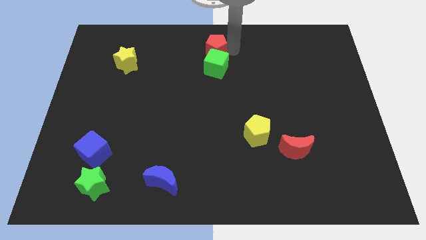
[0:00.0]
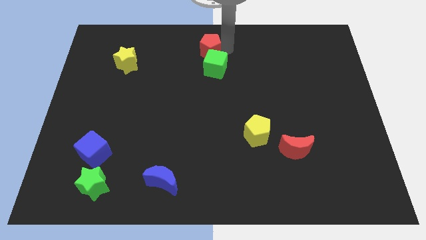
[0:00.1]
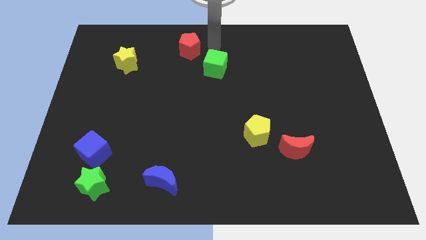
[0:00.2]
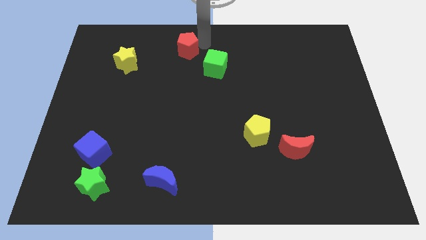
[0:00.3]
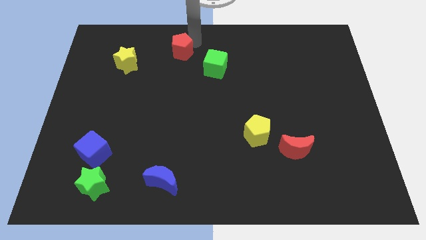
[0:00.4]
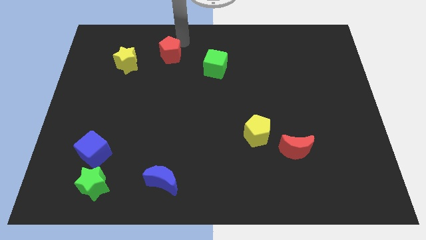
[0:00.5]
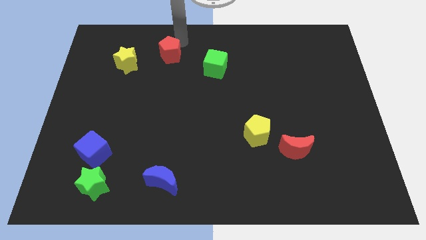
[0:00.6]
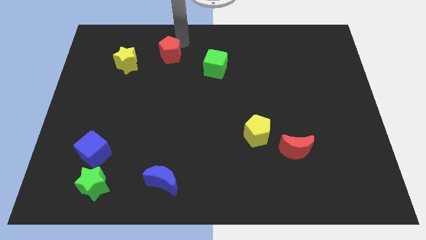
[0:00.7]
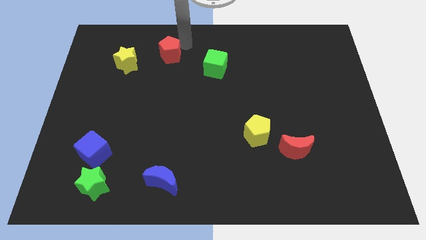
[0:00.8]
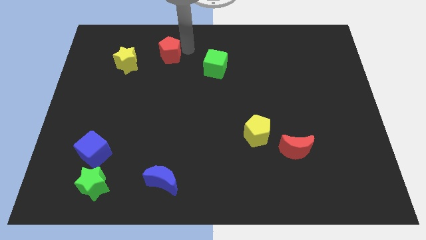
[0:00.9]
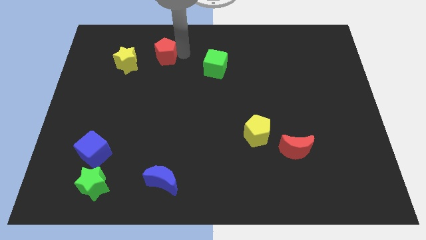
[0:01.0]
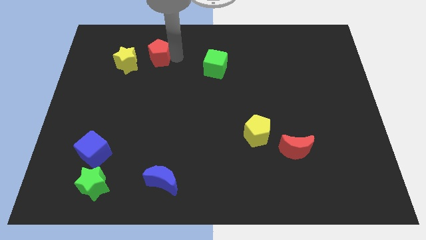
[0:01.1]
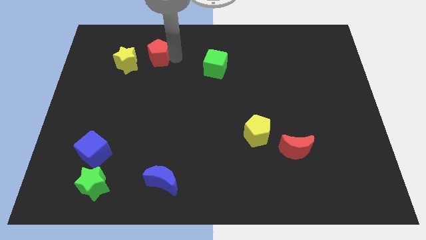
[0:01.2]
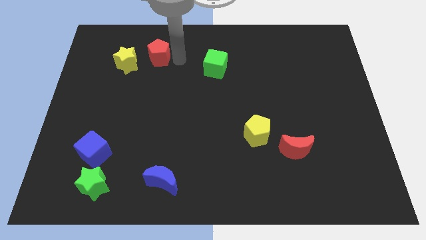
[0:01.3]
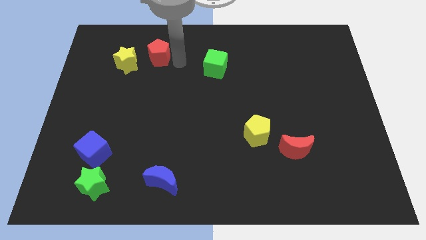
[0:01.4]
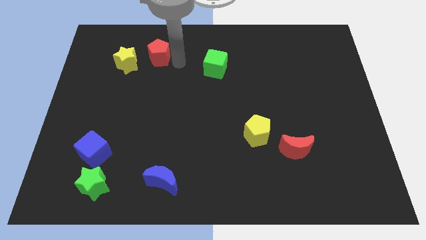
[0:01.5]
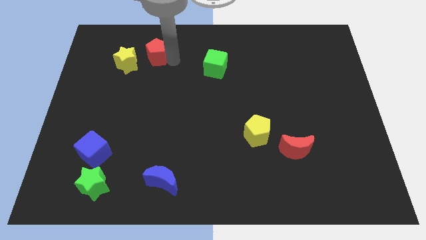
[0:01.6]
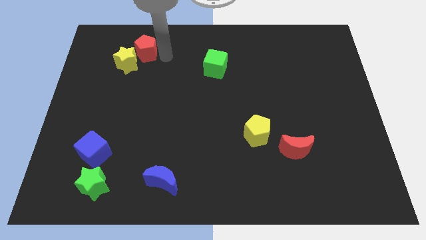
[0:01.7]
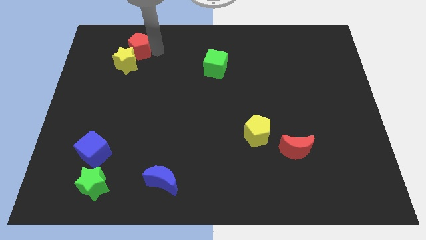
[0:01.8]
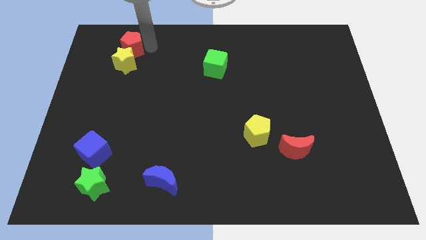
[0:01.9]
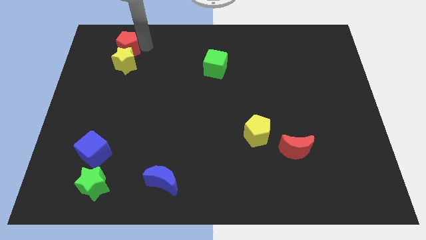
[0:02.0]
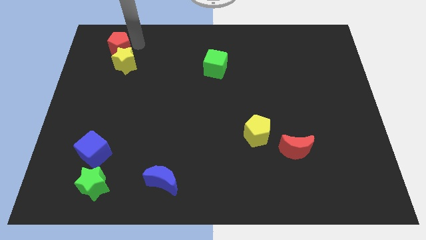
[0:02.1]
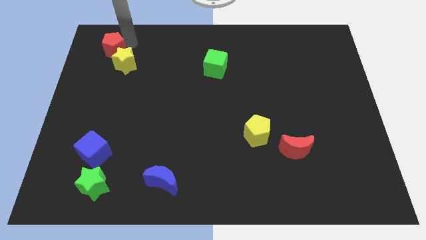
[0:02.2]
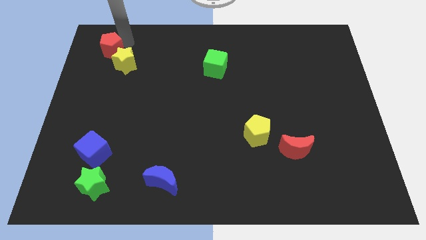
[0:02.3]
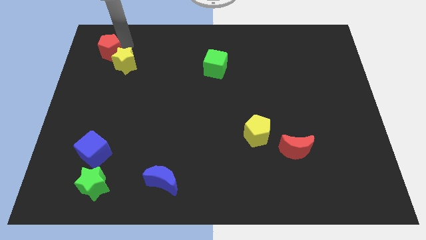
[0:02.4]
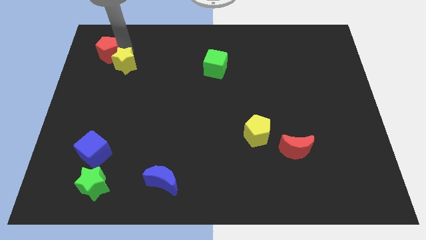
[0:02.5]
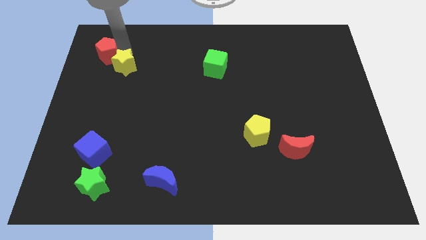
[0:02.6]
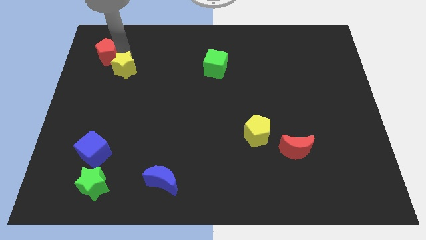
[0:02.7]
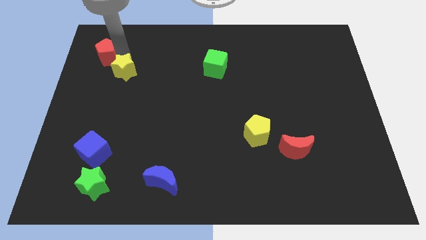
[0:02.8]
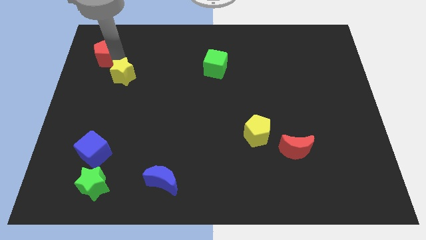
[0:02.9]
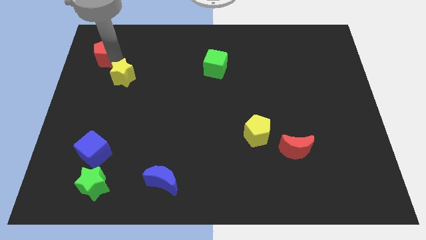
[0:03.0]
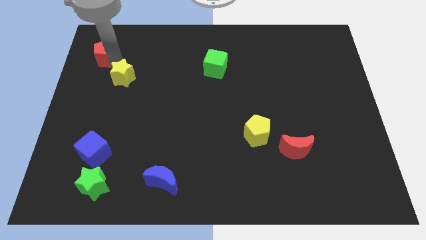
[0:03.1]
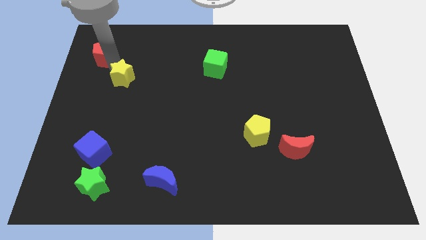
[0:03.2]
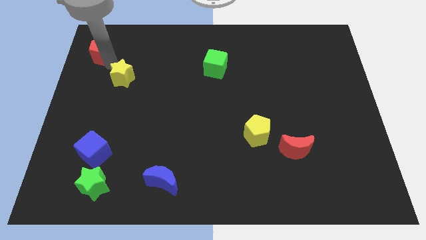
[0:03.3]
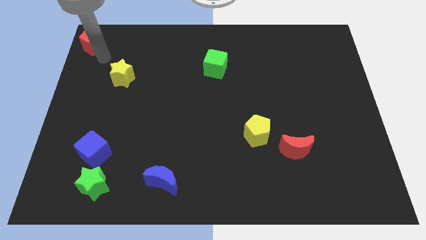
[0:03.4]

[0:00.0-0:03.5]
push the red pentagon to the top left side of the yellow star

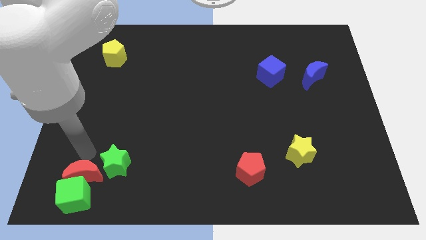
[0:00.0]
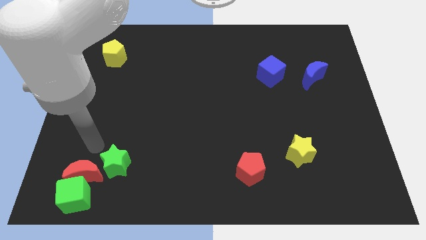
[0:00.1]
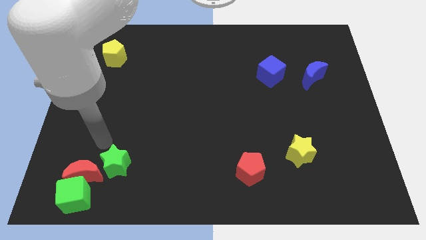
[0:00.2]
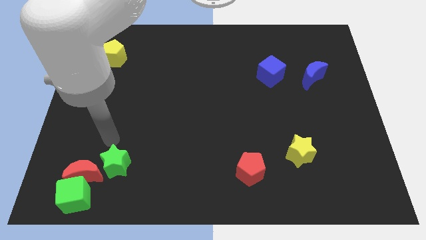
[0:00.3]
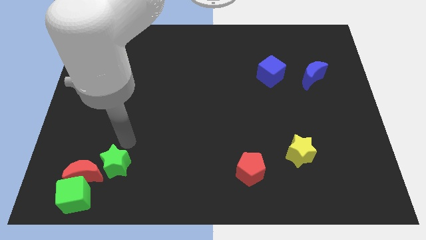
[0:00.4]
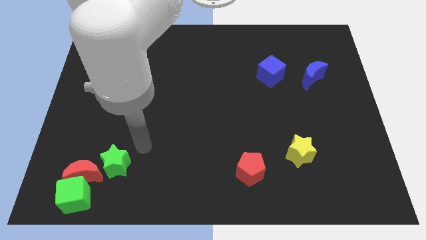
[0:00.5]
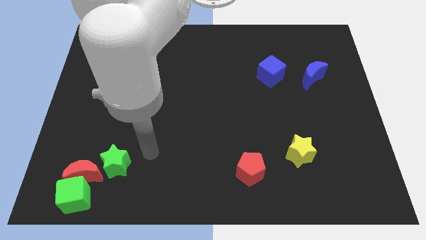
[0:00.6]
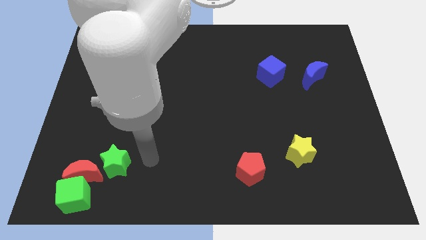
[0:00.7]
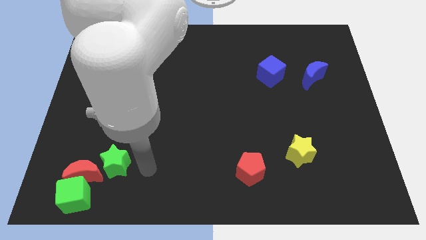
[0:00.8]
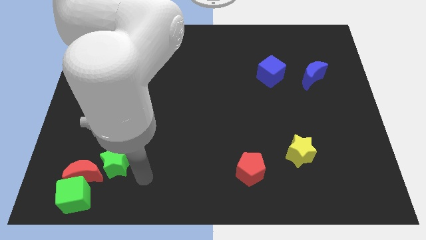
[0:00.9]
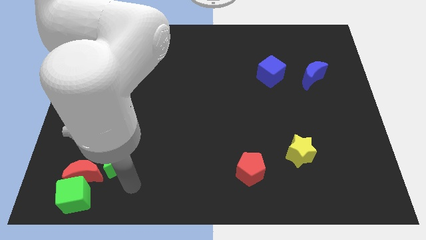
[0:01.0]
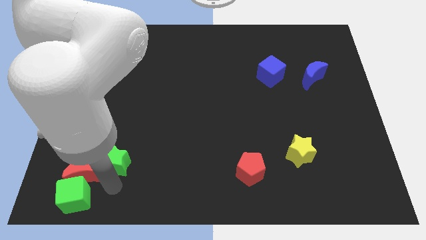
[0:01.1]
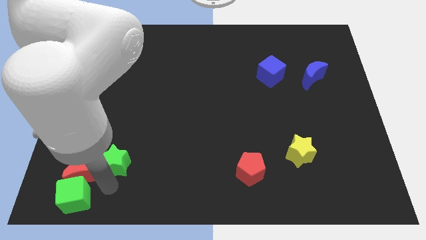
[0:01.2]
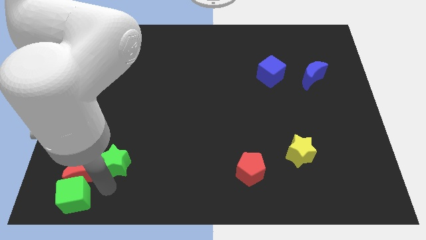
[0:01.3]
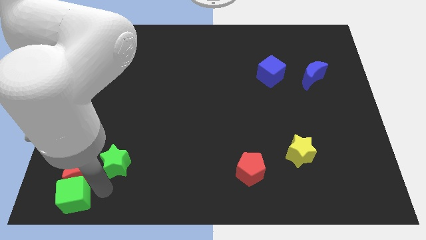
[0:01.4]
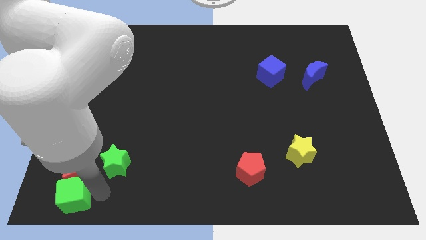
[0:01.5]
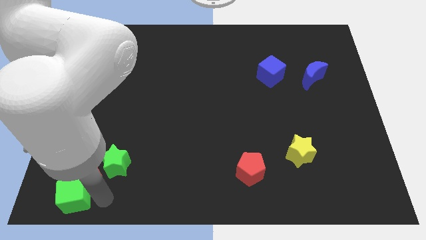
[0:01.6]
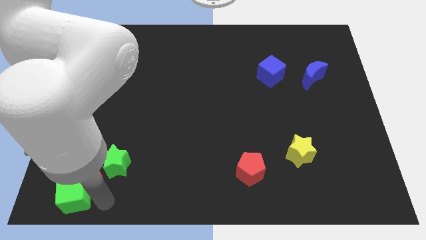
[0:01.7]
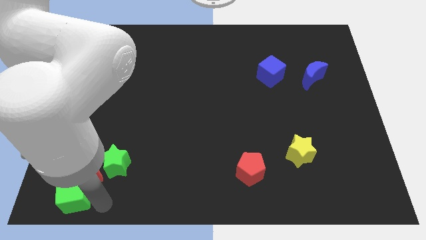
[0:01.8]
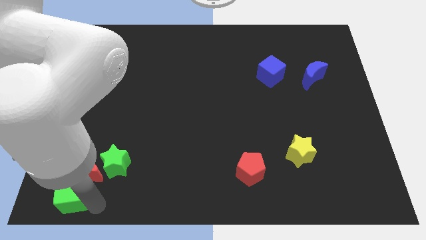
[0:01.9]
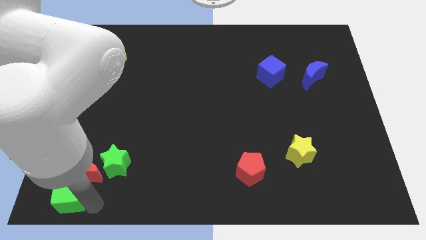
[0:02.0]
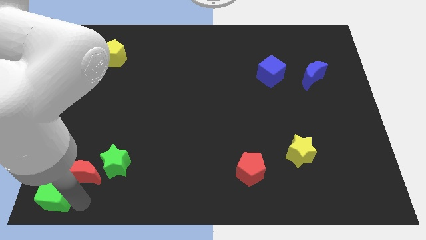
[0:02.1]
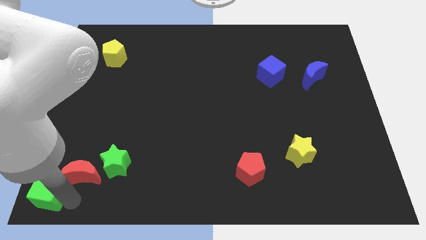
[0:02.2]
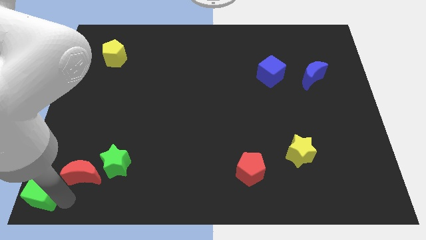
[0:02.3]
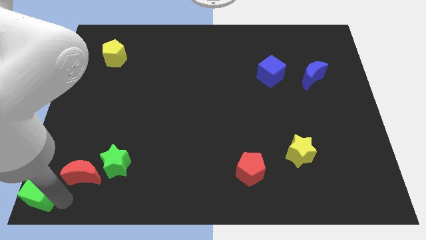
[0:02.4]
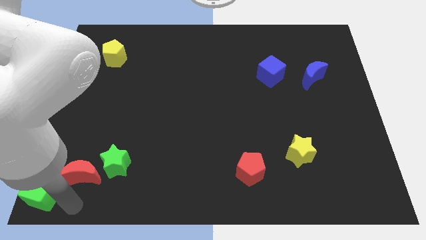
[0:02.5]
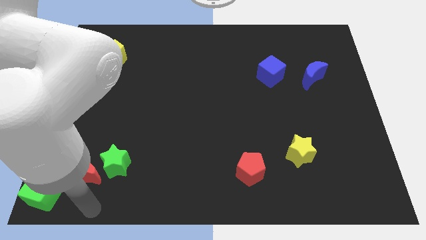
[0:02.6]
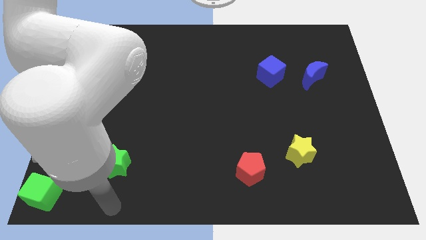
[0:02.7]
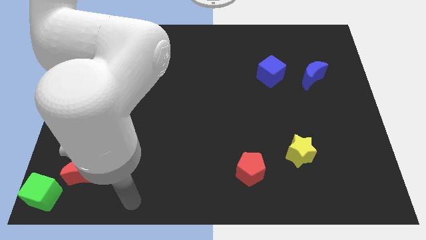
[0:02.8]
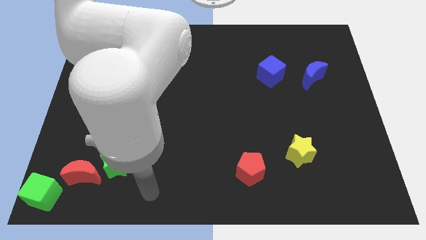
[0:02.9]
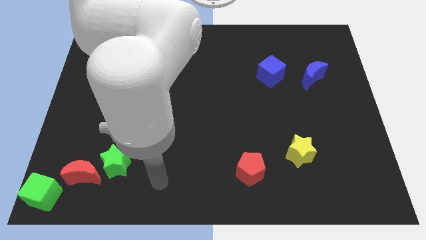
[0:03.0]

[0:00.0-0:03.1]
move the green cube to the bottom left of the board

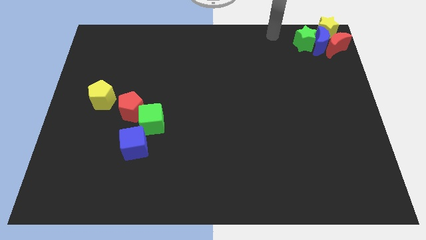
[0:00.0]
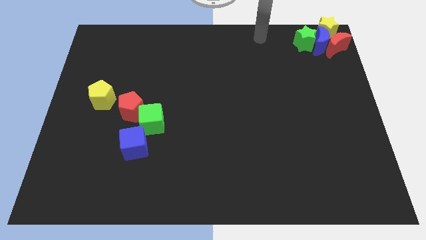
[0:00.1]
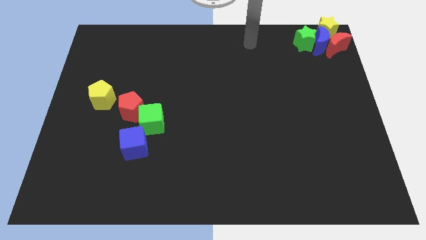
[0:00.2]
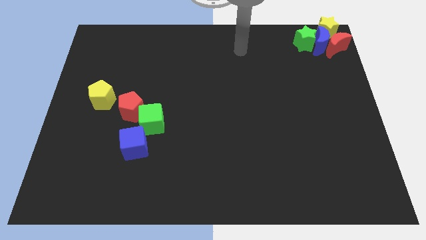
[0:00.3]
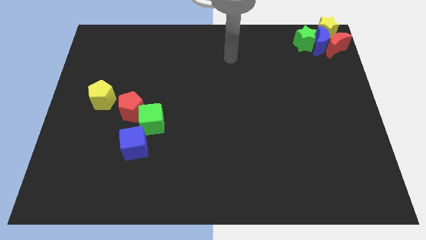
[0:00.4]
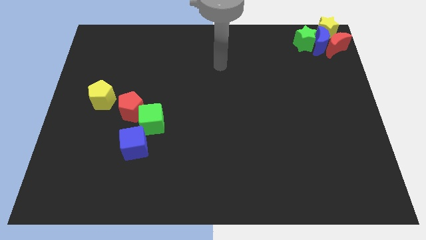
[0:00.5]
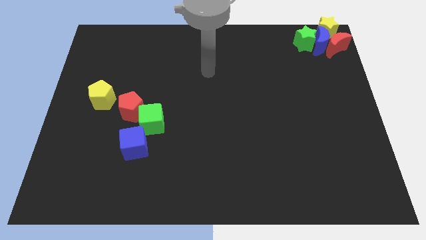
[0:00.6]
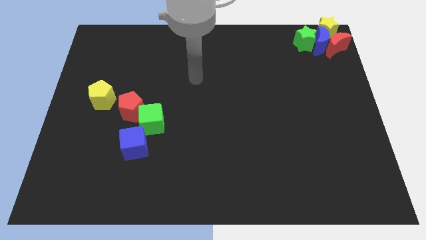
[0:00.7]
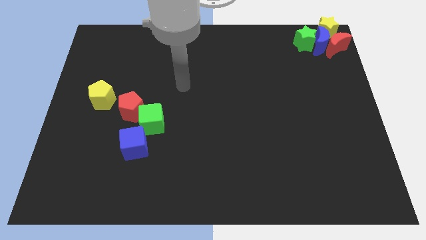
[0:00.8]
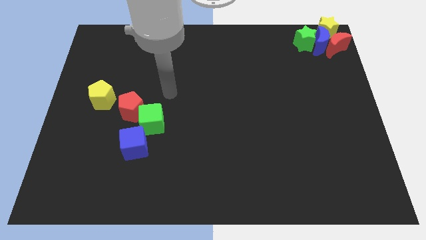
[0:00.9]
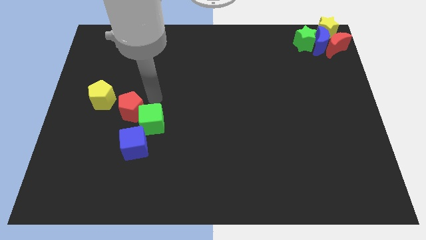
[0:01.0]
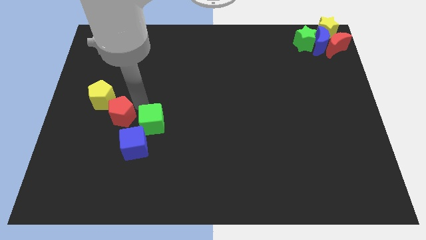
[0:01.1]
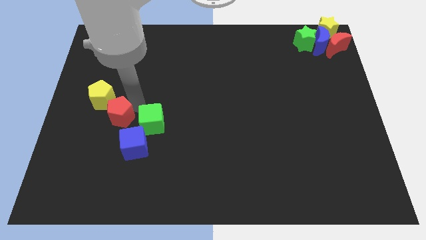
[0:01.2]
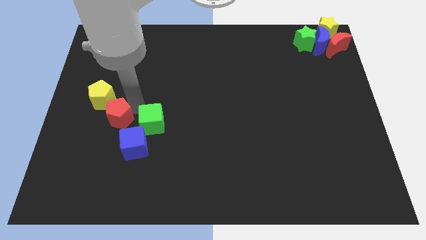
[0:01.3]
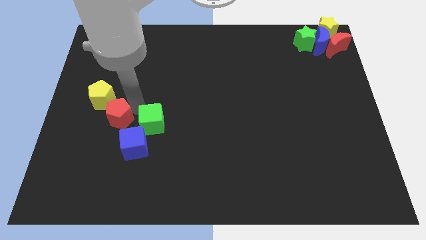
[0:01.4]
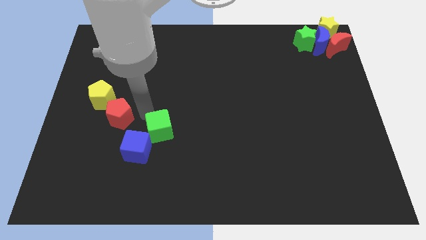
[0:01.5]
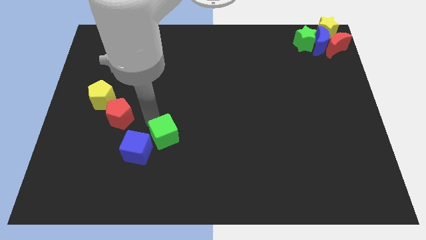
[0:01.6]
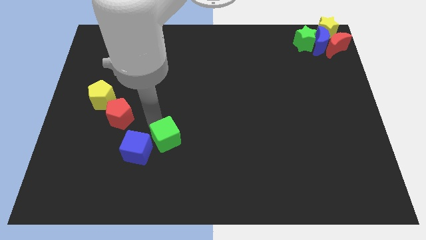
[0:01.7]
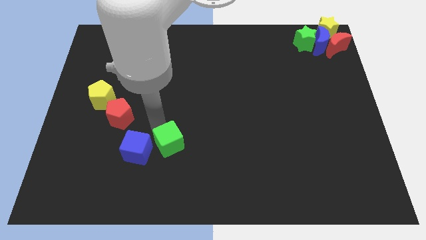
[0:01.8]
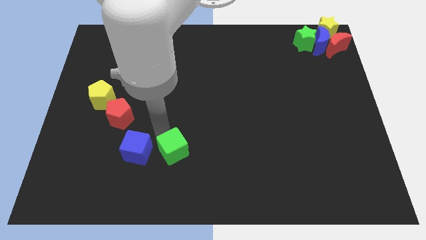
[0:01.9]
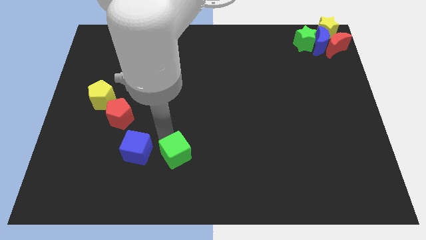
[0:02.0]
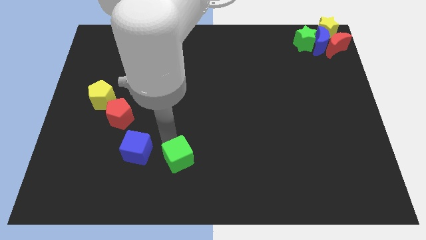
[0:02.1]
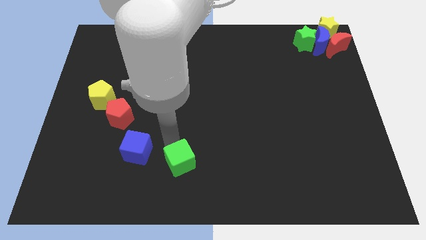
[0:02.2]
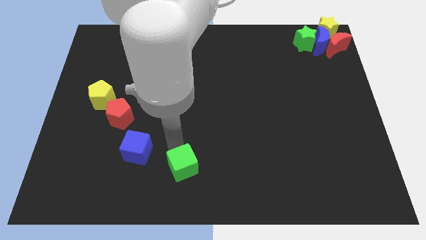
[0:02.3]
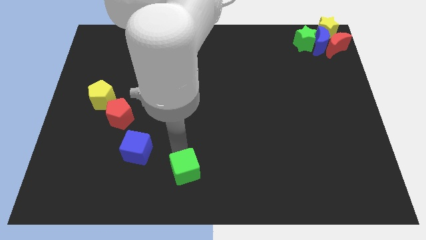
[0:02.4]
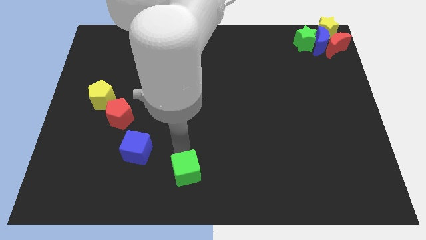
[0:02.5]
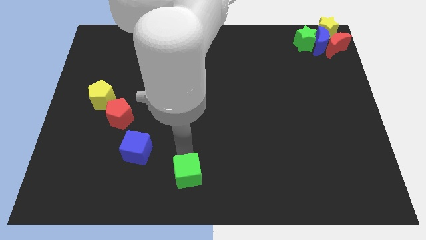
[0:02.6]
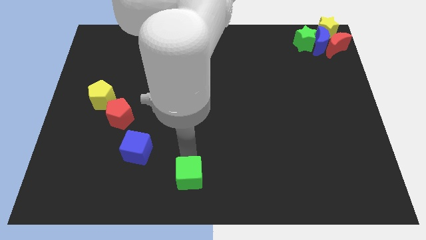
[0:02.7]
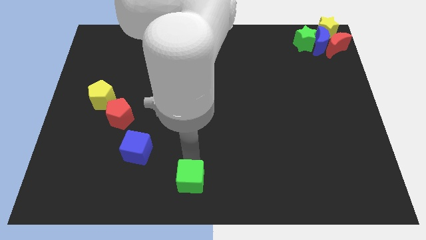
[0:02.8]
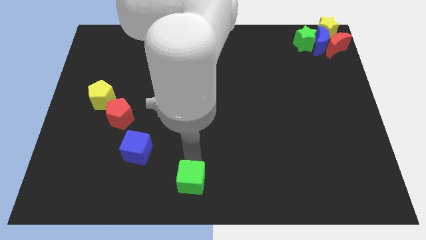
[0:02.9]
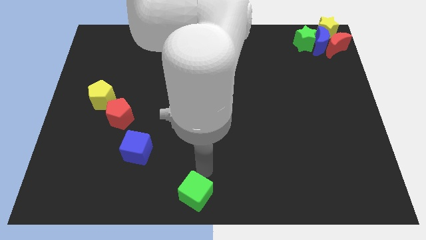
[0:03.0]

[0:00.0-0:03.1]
push the green cube to the bottom center
